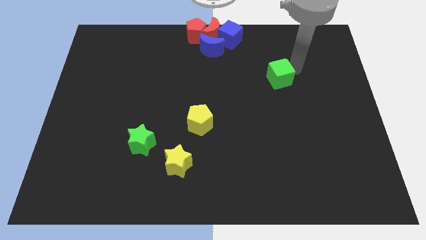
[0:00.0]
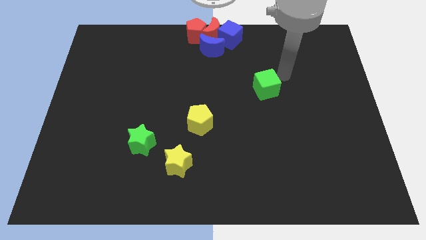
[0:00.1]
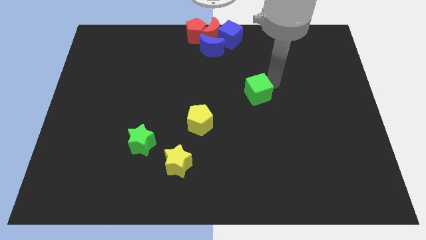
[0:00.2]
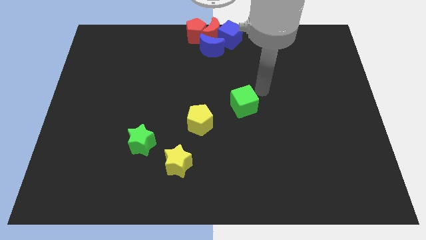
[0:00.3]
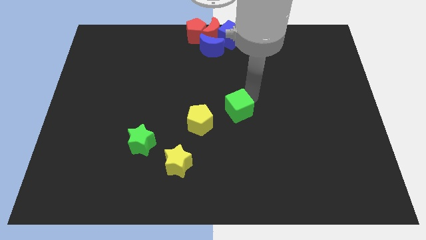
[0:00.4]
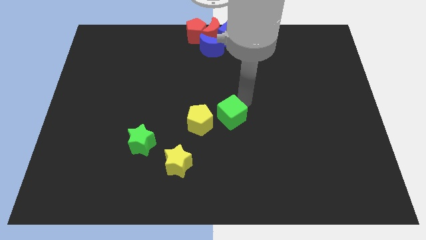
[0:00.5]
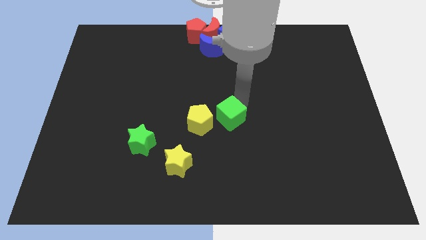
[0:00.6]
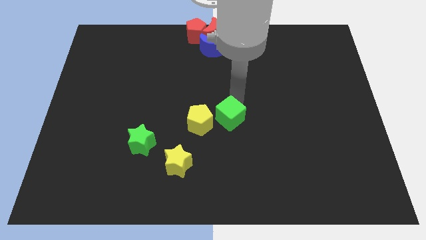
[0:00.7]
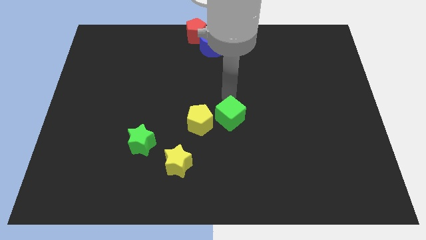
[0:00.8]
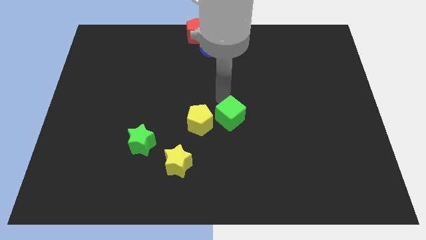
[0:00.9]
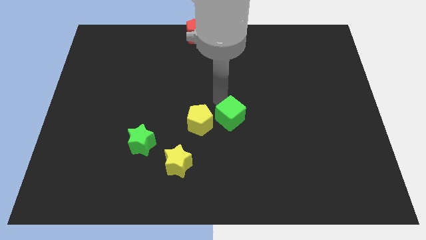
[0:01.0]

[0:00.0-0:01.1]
place the green cube to the right of the yellow pentagon

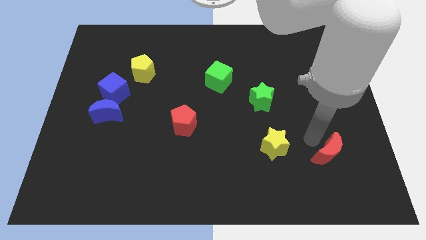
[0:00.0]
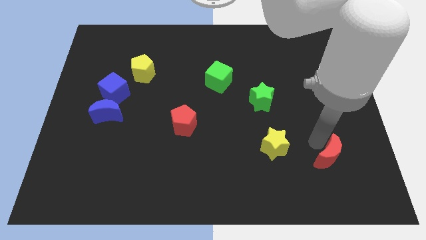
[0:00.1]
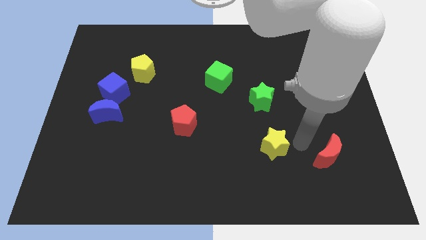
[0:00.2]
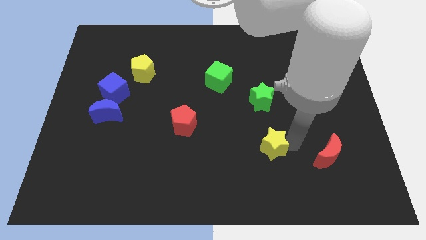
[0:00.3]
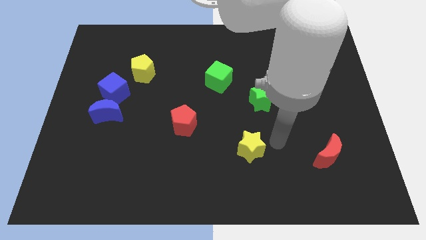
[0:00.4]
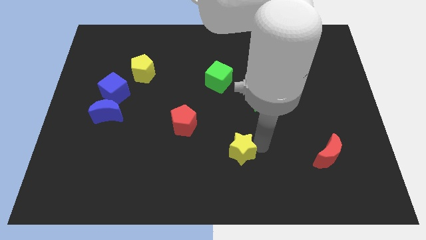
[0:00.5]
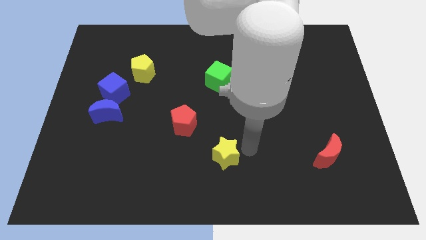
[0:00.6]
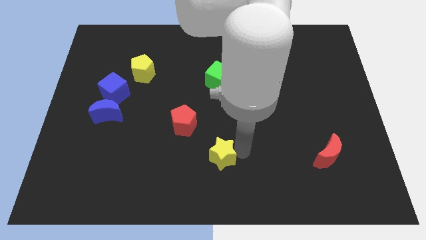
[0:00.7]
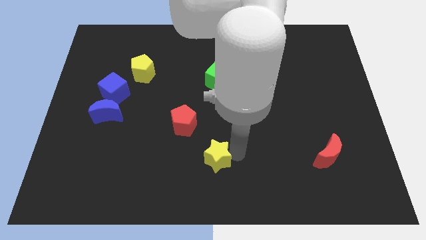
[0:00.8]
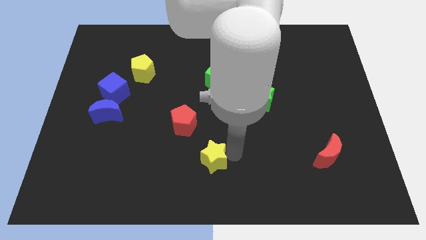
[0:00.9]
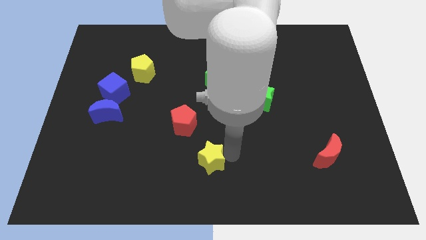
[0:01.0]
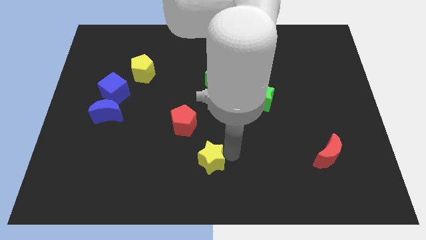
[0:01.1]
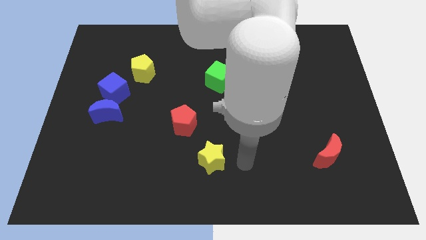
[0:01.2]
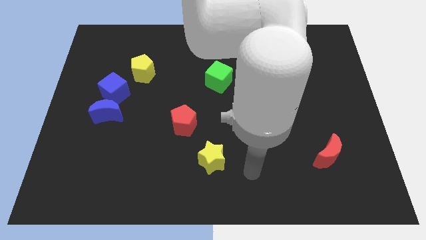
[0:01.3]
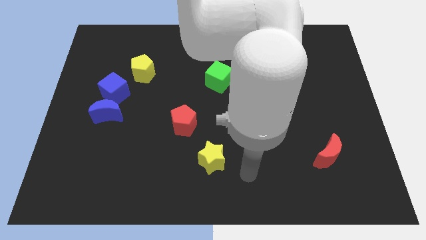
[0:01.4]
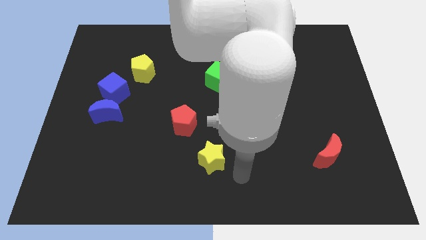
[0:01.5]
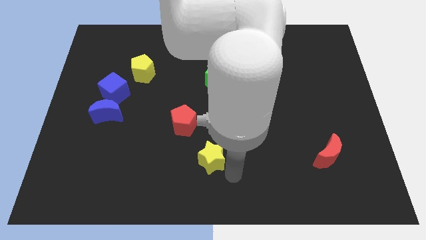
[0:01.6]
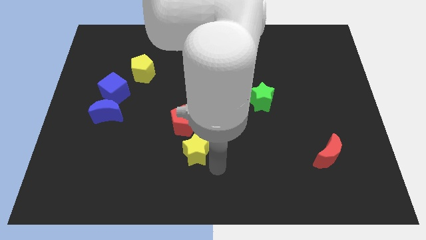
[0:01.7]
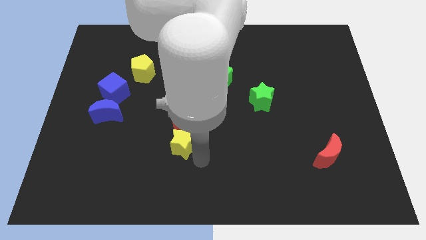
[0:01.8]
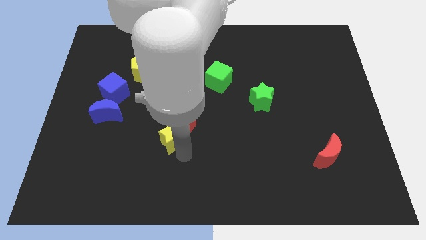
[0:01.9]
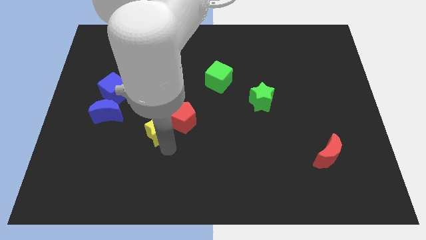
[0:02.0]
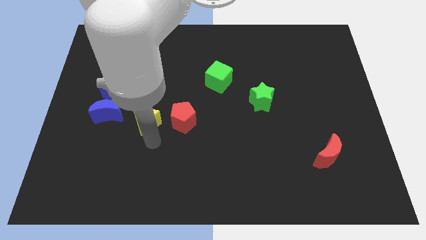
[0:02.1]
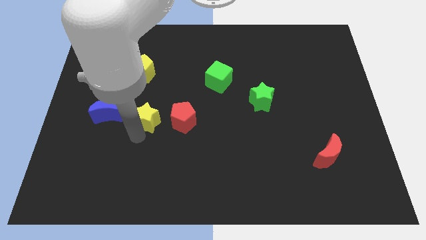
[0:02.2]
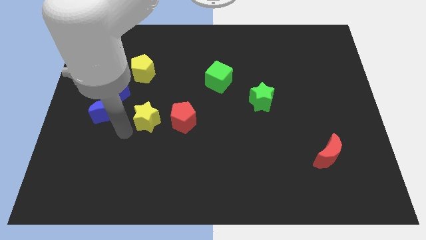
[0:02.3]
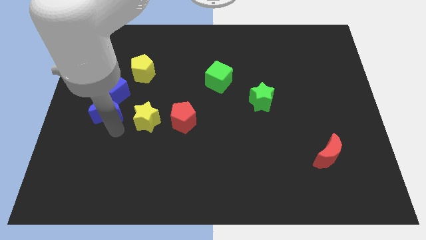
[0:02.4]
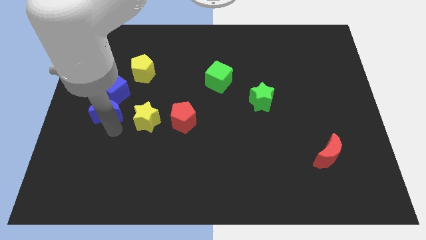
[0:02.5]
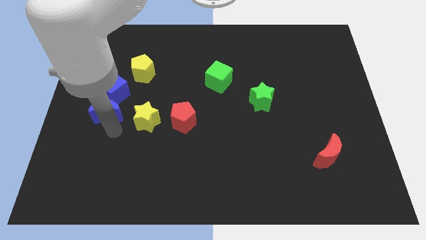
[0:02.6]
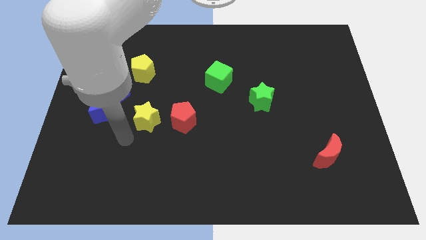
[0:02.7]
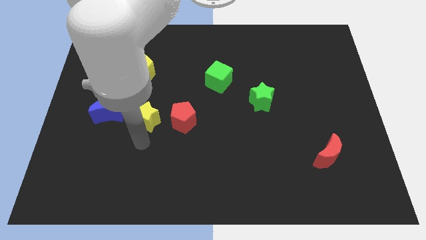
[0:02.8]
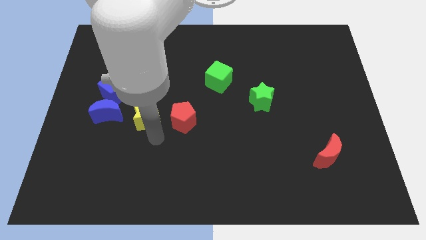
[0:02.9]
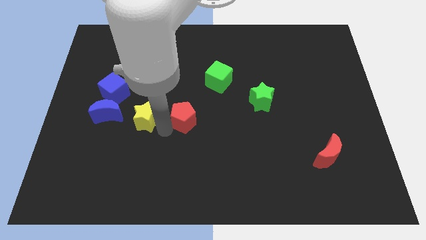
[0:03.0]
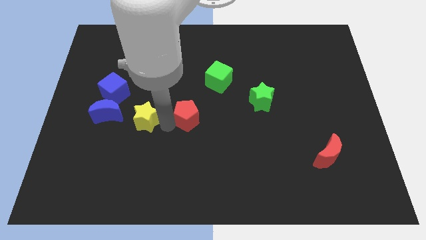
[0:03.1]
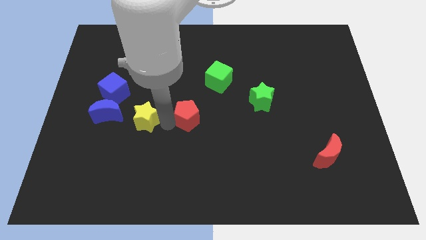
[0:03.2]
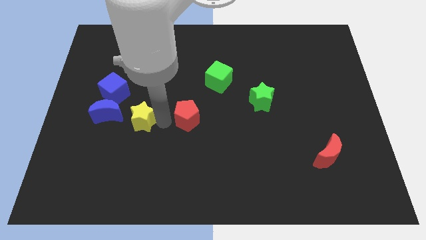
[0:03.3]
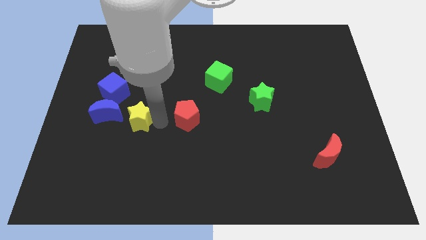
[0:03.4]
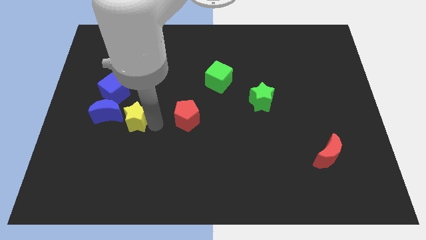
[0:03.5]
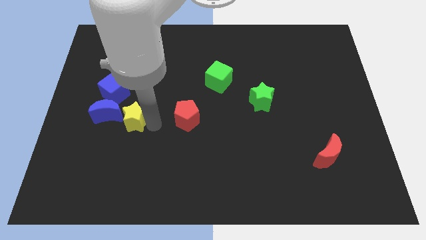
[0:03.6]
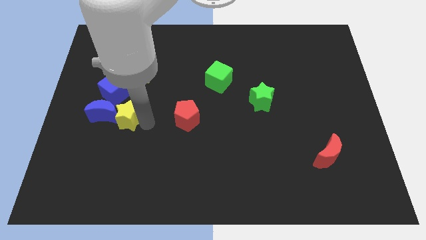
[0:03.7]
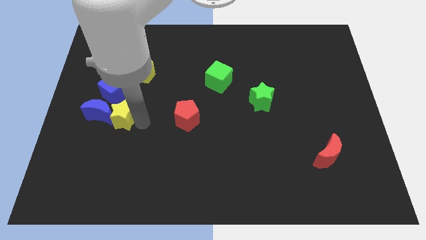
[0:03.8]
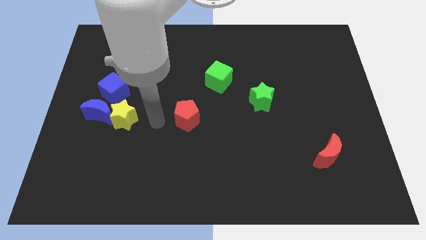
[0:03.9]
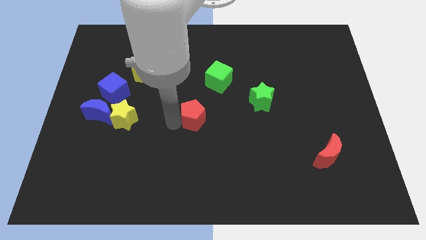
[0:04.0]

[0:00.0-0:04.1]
push yellow star into blue moon

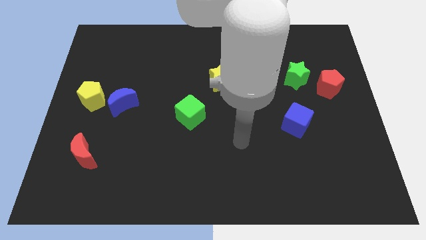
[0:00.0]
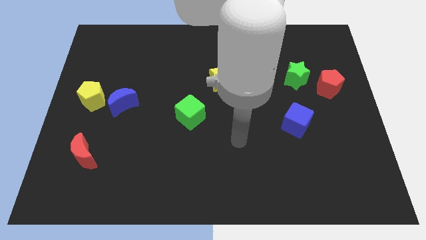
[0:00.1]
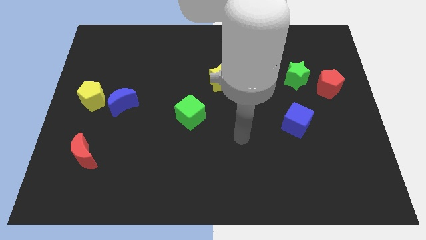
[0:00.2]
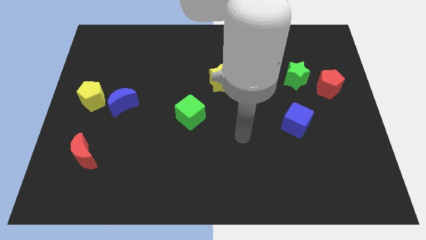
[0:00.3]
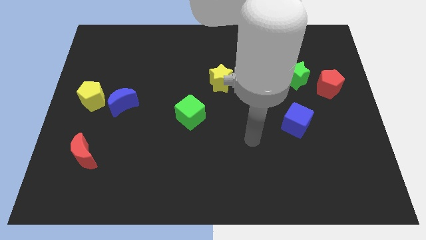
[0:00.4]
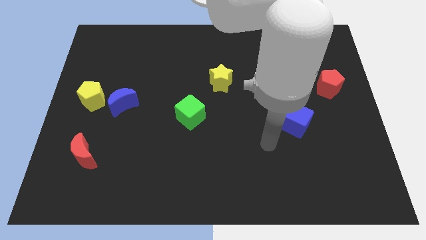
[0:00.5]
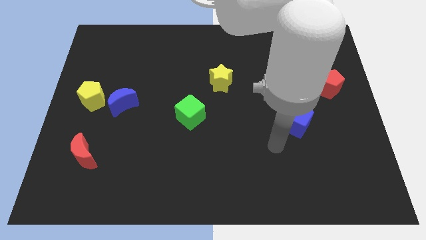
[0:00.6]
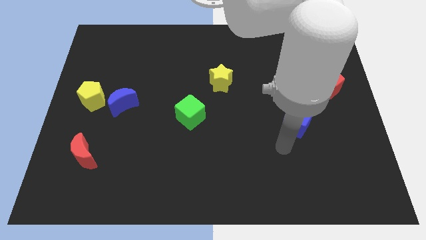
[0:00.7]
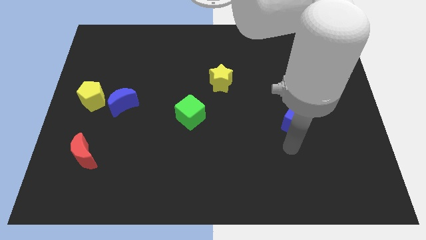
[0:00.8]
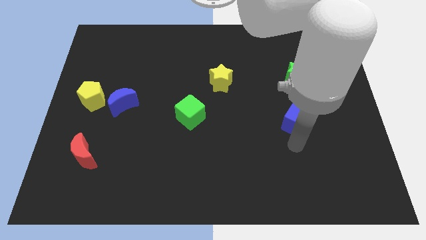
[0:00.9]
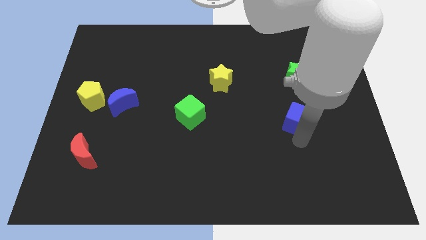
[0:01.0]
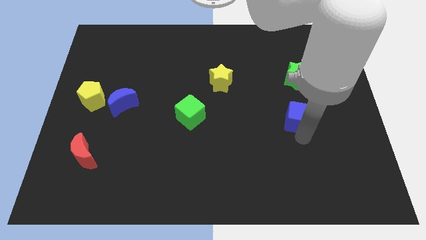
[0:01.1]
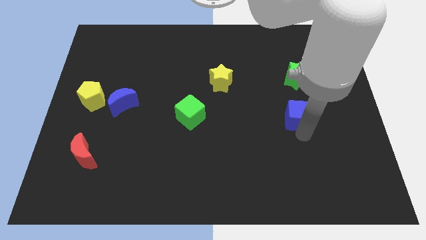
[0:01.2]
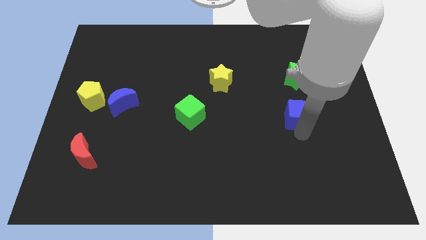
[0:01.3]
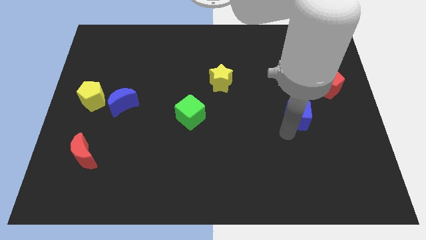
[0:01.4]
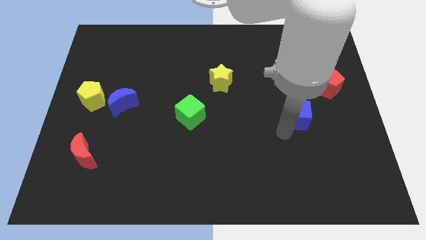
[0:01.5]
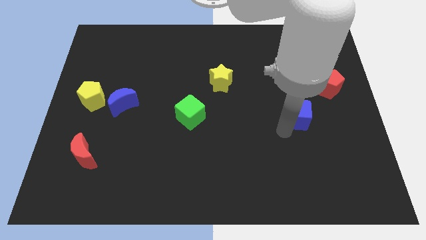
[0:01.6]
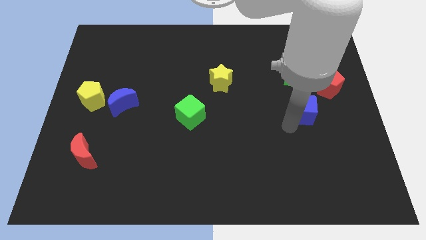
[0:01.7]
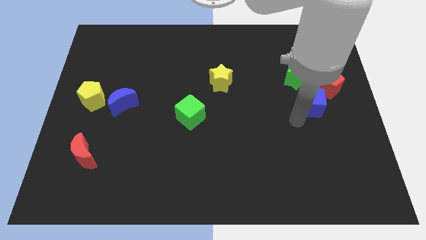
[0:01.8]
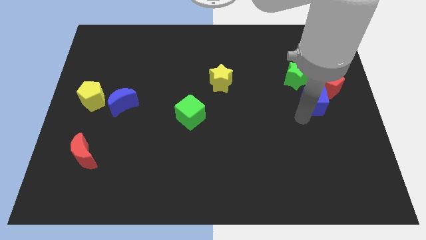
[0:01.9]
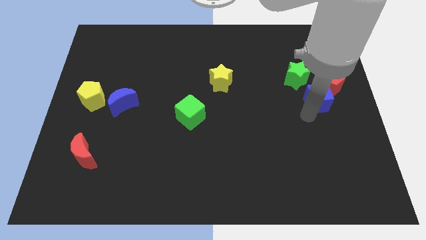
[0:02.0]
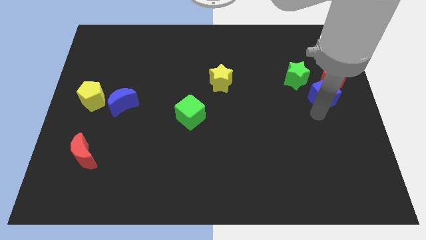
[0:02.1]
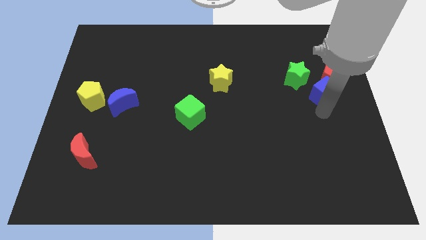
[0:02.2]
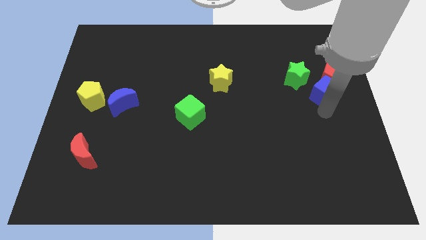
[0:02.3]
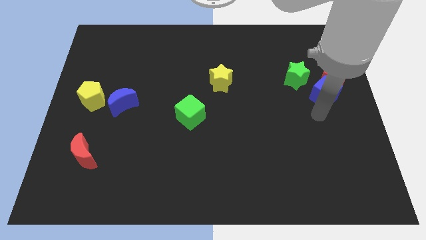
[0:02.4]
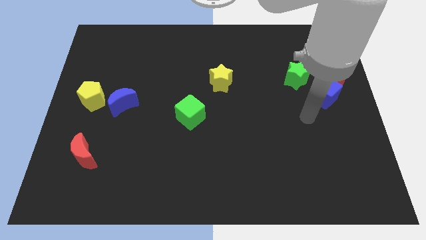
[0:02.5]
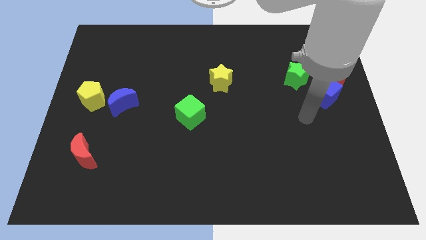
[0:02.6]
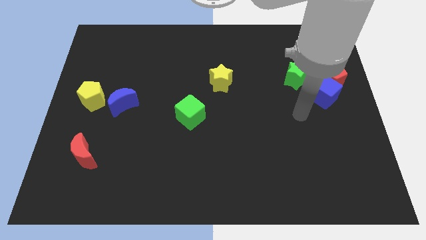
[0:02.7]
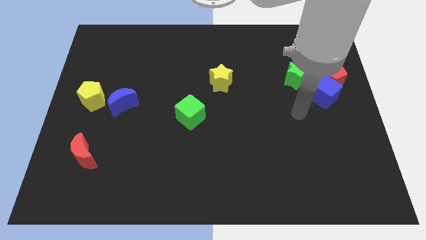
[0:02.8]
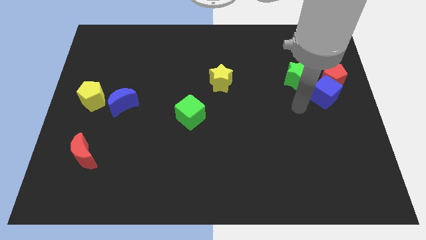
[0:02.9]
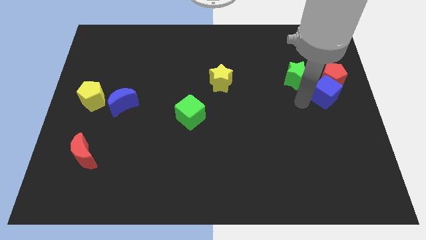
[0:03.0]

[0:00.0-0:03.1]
push the blue cube to the bottom right of the red pentagon

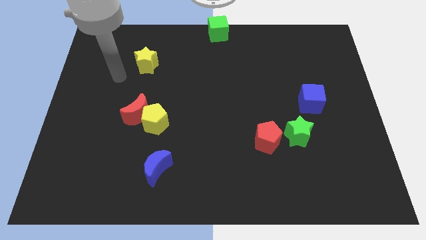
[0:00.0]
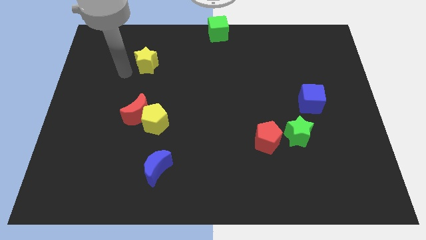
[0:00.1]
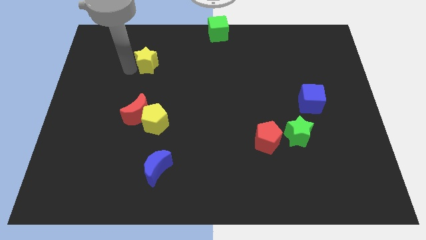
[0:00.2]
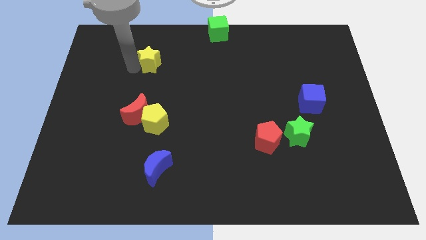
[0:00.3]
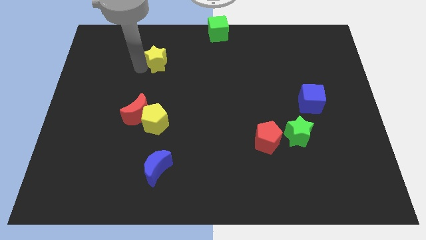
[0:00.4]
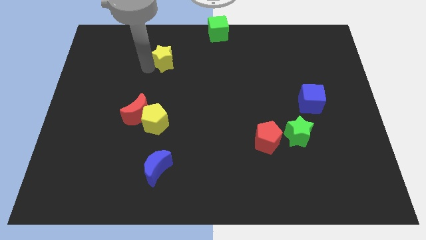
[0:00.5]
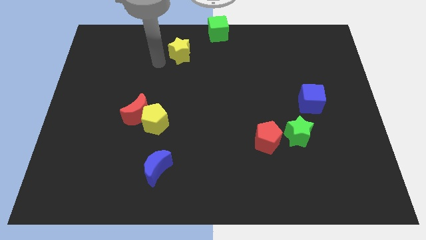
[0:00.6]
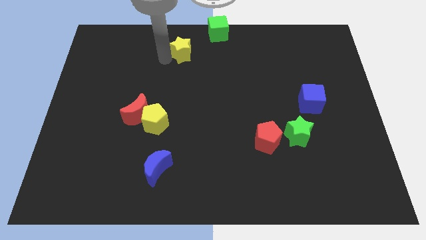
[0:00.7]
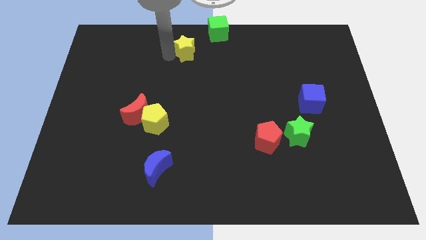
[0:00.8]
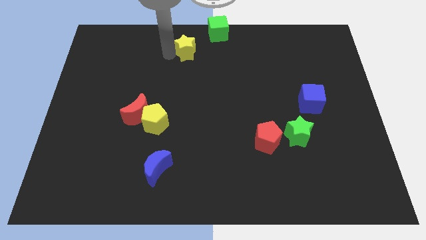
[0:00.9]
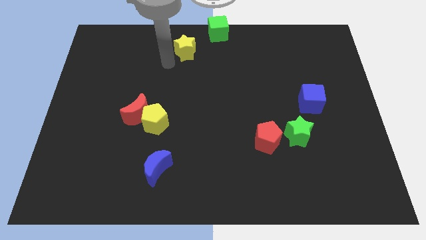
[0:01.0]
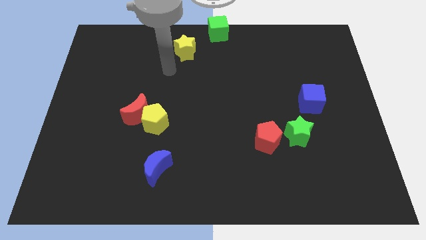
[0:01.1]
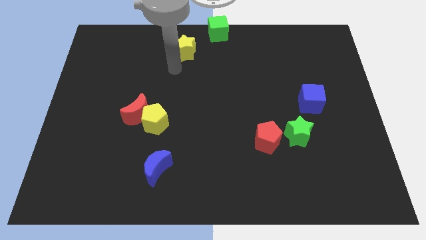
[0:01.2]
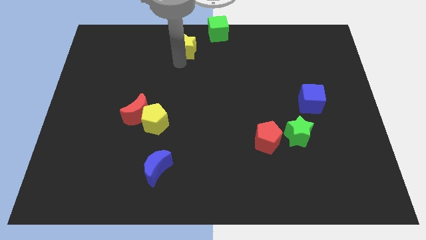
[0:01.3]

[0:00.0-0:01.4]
move the yellow star to the top of the board
